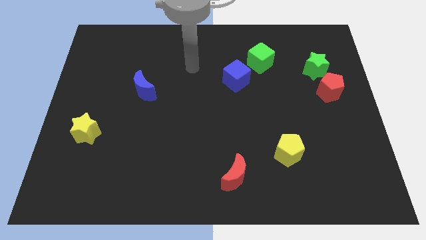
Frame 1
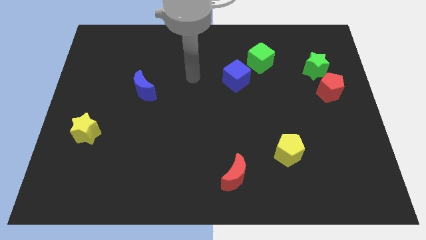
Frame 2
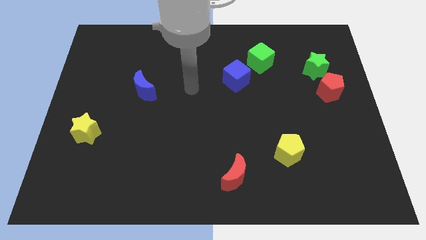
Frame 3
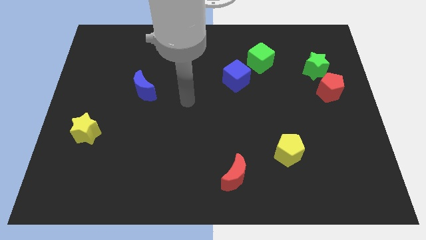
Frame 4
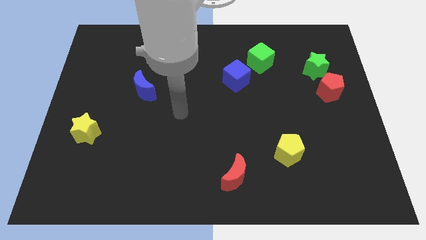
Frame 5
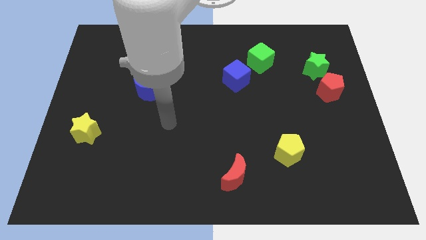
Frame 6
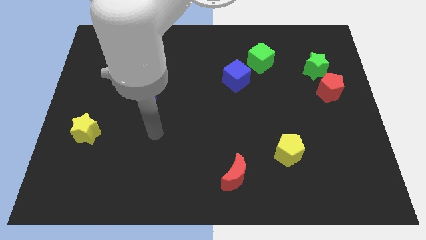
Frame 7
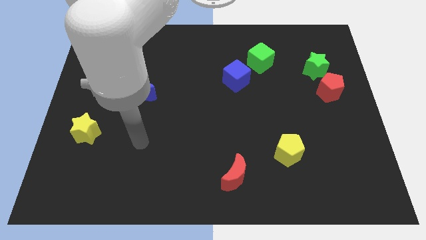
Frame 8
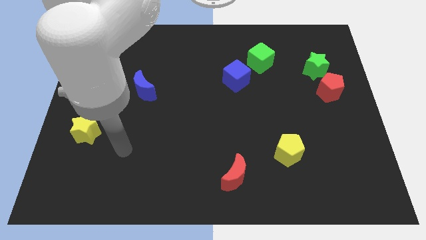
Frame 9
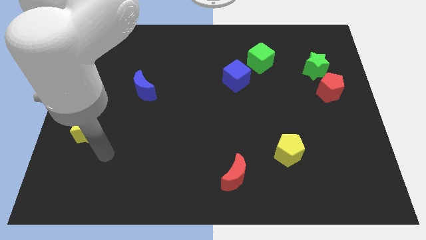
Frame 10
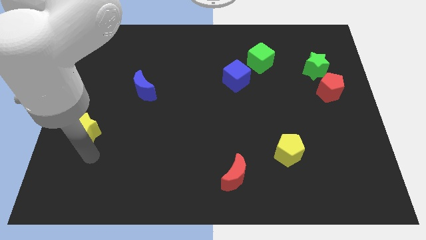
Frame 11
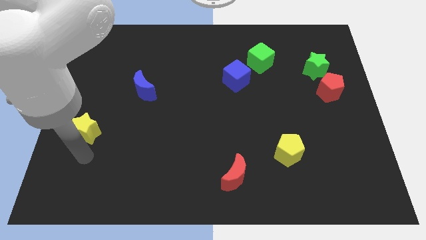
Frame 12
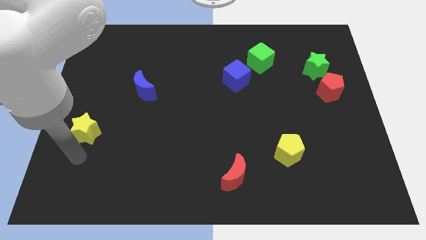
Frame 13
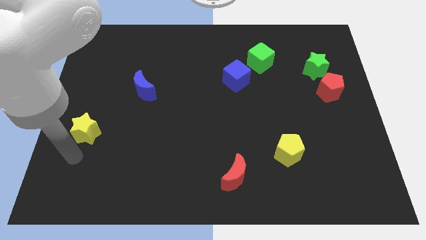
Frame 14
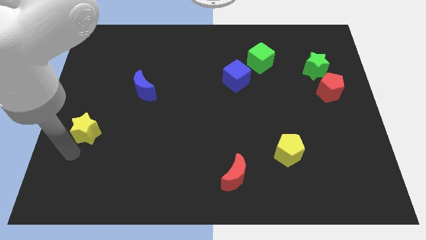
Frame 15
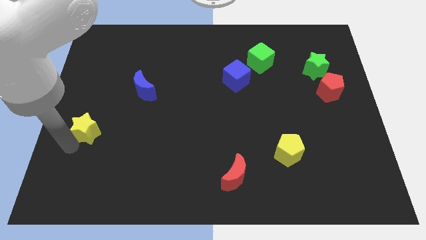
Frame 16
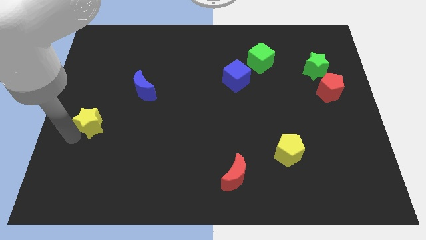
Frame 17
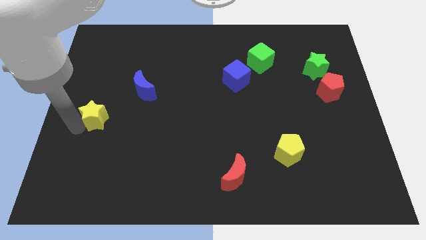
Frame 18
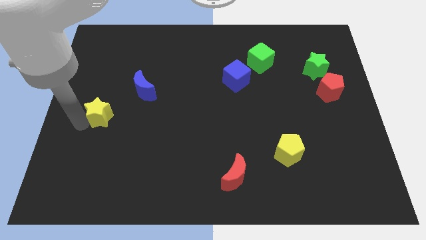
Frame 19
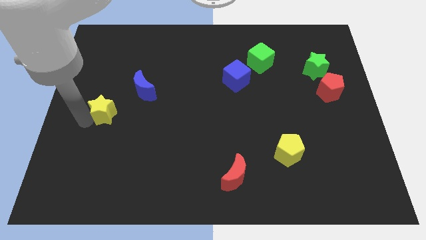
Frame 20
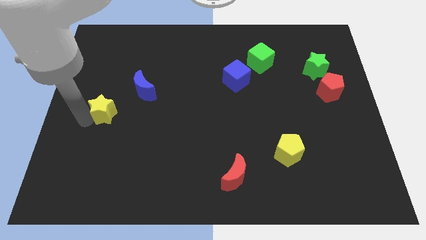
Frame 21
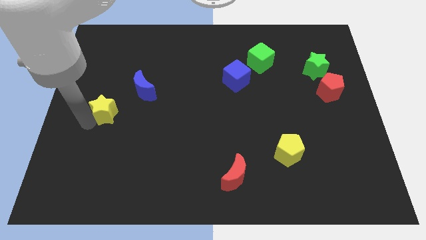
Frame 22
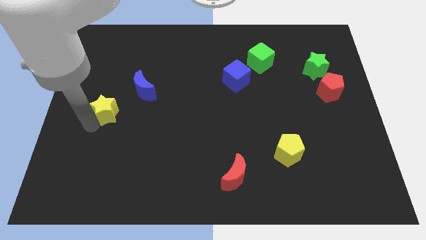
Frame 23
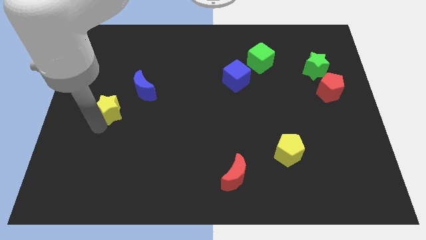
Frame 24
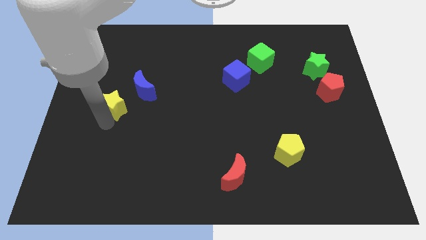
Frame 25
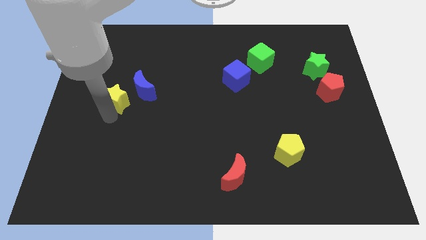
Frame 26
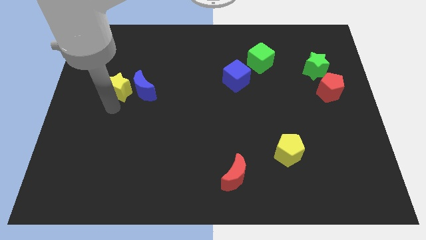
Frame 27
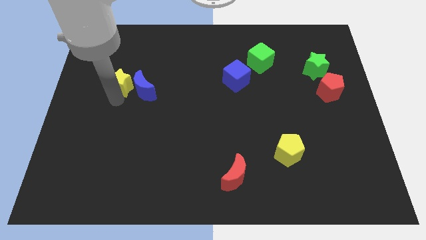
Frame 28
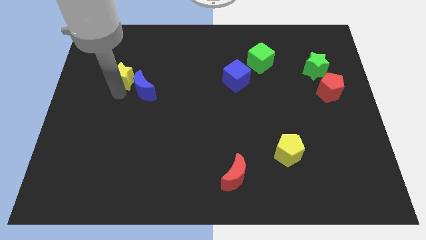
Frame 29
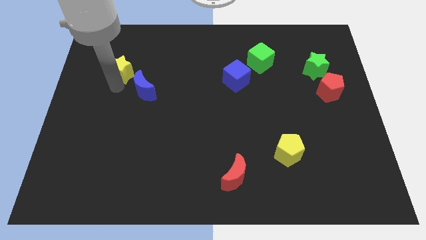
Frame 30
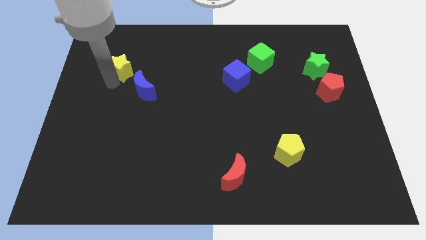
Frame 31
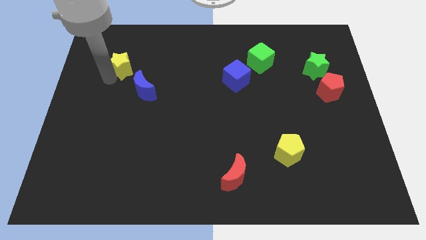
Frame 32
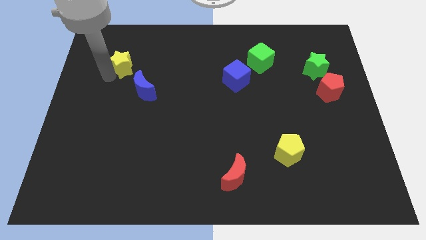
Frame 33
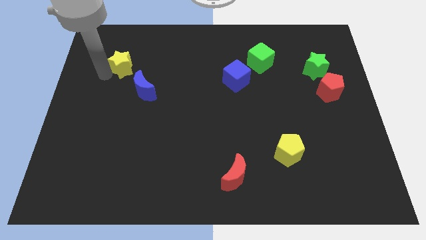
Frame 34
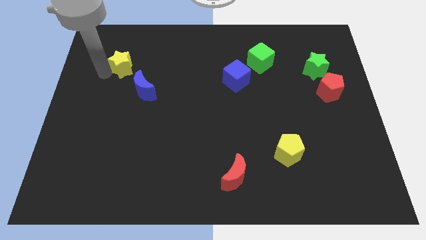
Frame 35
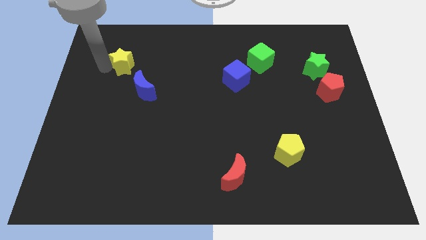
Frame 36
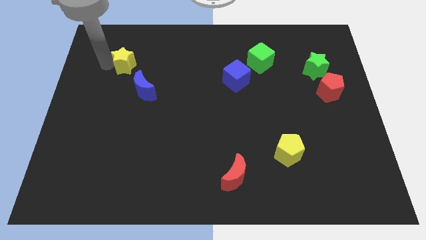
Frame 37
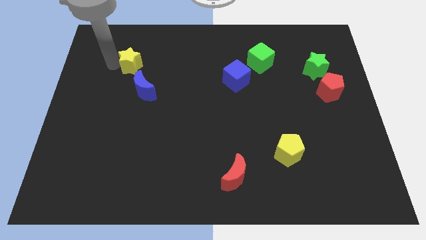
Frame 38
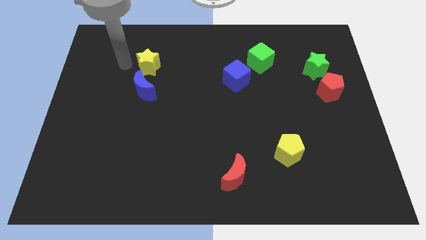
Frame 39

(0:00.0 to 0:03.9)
move the yellow star to the top side of the blue crescent

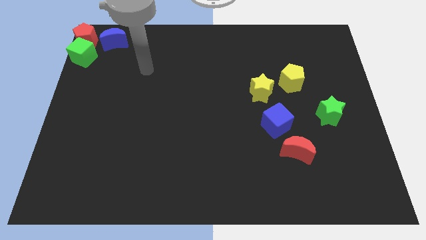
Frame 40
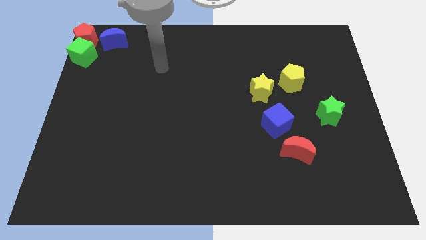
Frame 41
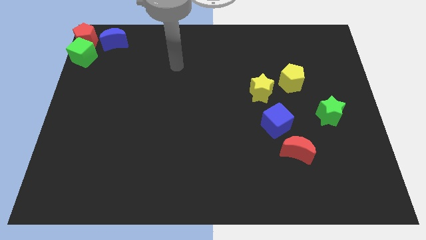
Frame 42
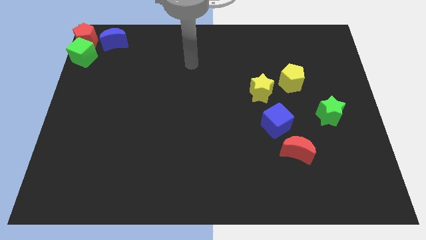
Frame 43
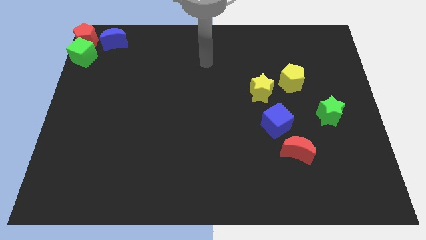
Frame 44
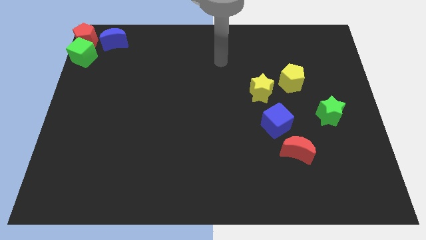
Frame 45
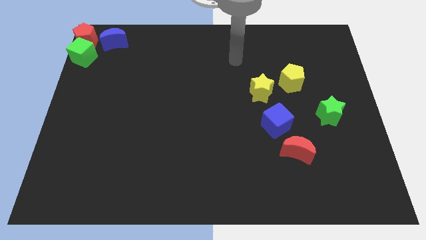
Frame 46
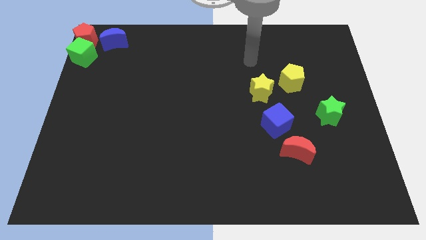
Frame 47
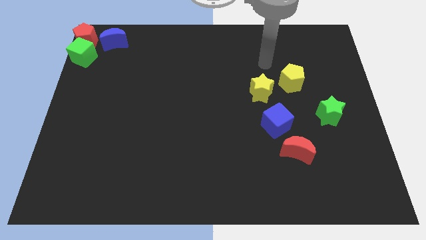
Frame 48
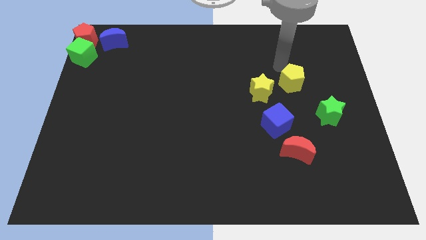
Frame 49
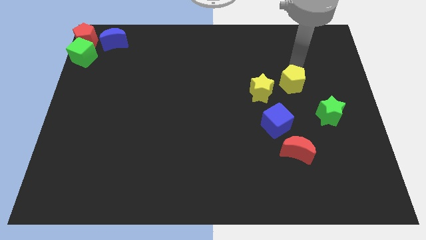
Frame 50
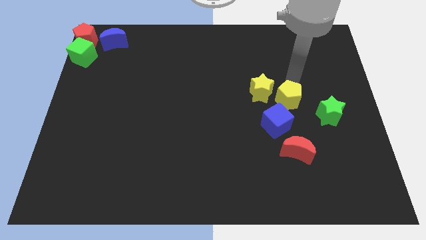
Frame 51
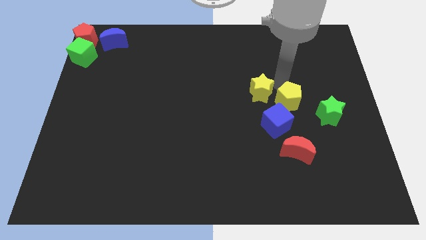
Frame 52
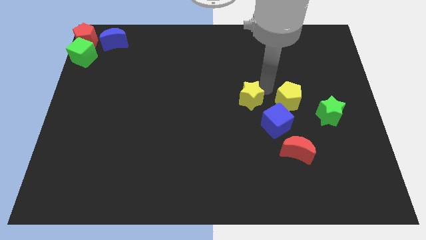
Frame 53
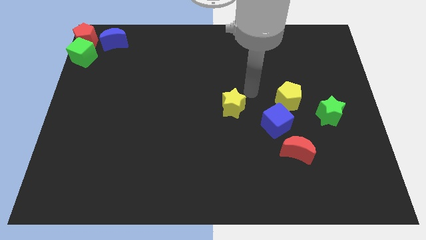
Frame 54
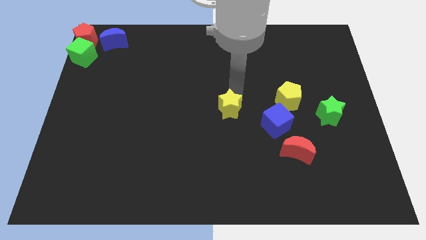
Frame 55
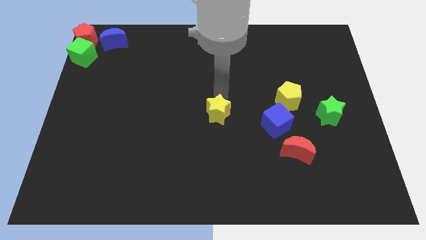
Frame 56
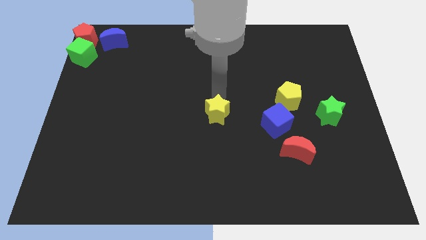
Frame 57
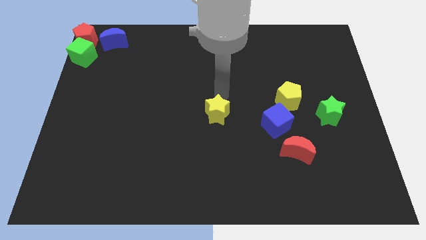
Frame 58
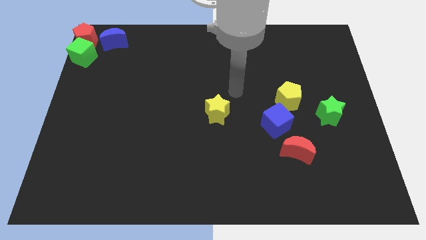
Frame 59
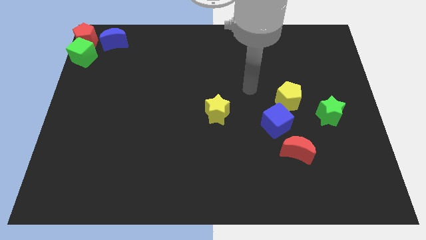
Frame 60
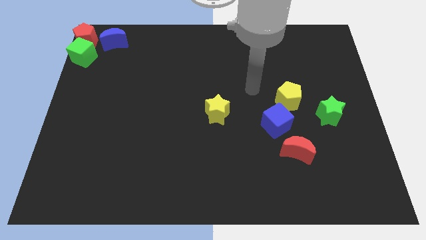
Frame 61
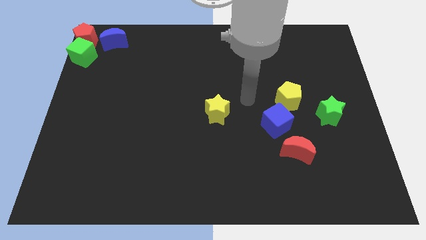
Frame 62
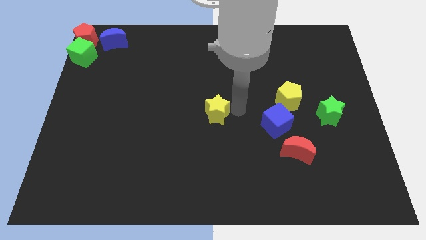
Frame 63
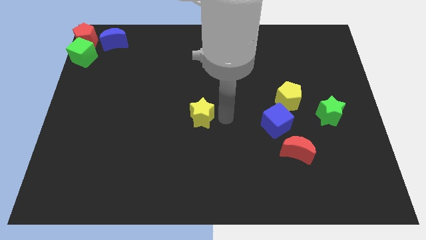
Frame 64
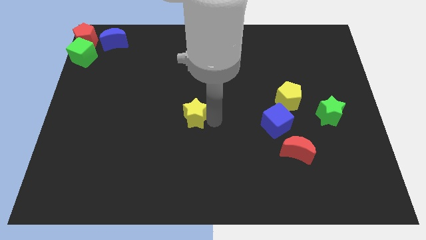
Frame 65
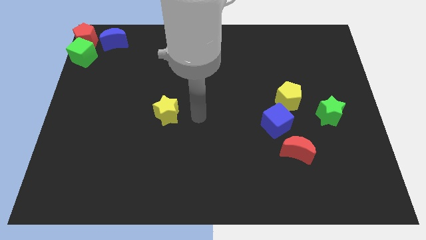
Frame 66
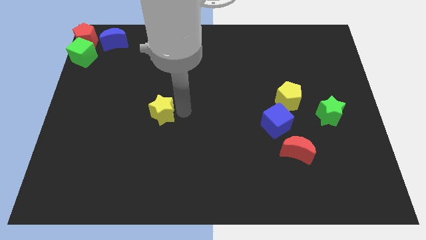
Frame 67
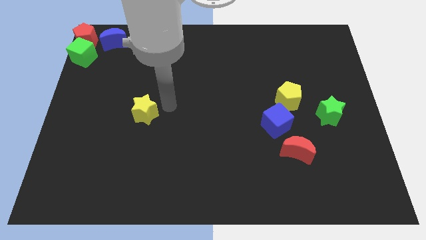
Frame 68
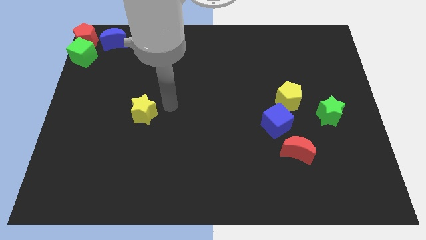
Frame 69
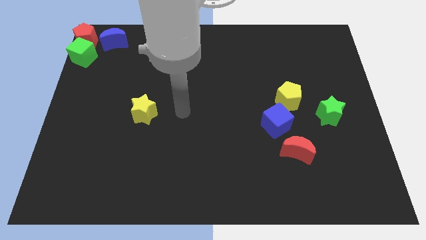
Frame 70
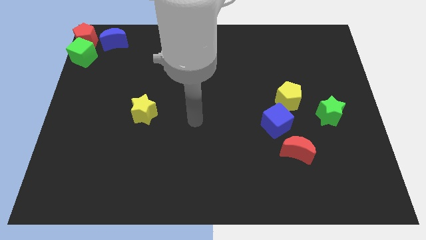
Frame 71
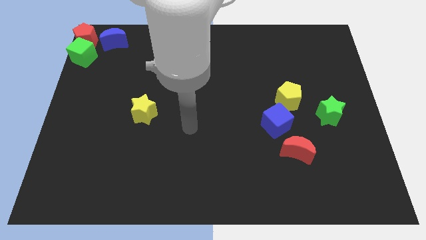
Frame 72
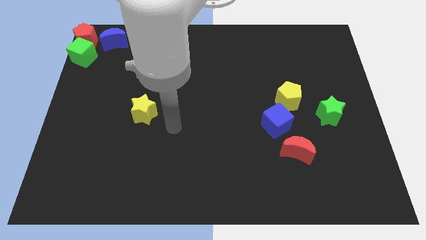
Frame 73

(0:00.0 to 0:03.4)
move yellow star to the left side

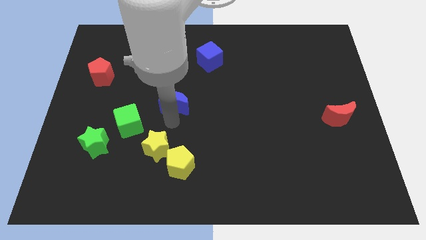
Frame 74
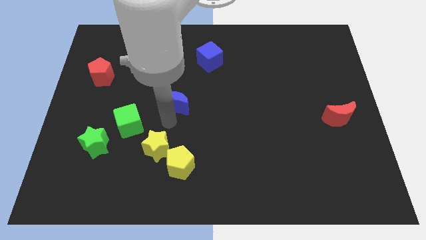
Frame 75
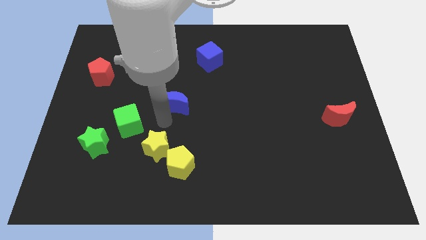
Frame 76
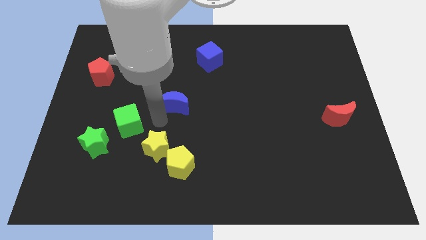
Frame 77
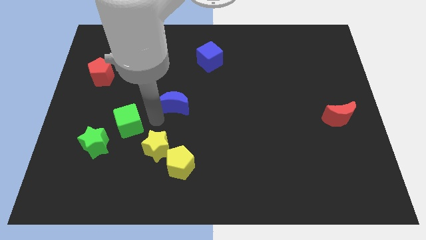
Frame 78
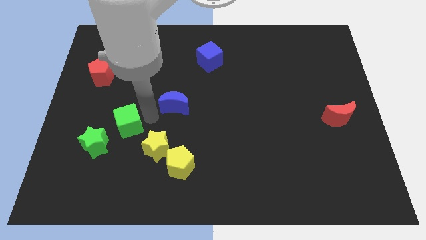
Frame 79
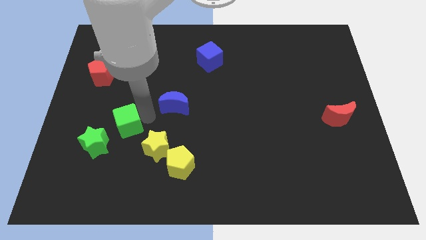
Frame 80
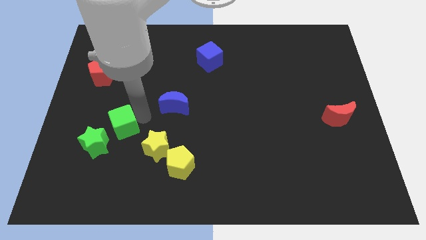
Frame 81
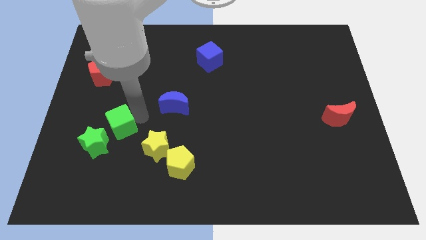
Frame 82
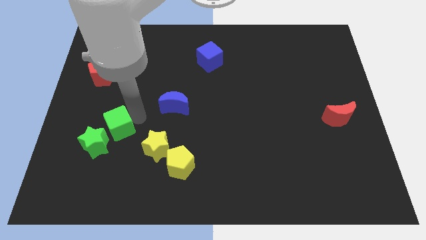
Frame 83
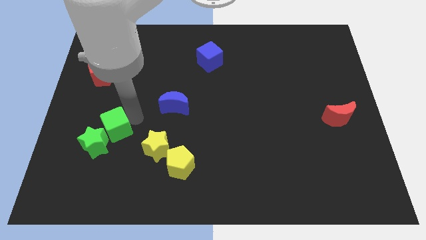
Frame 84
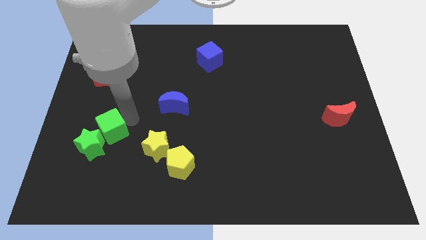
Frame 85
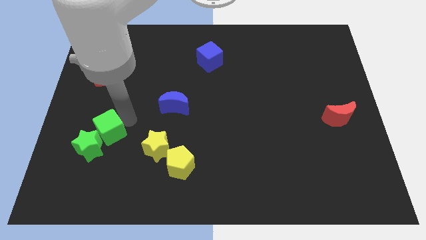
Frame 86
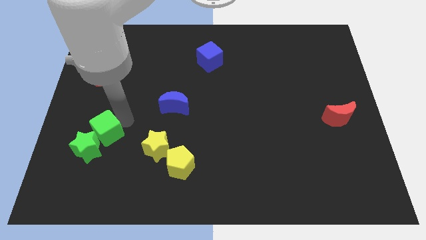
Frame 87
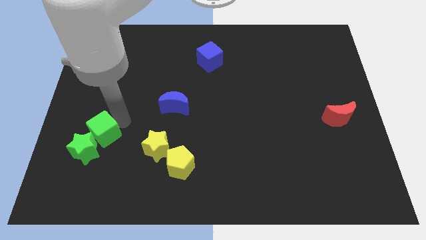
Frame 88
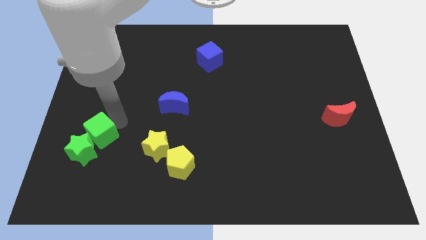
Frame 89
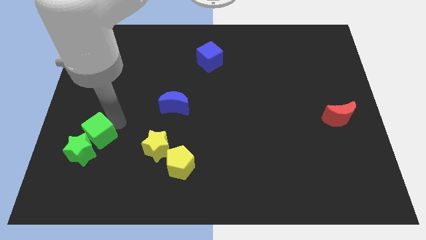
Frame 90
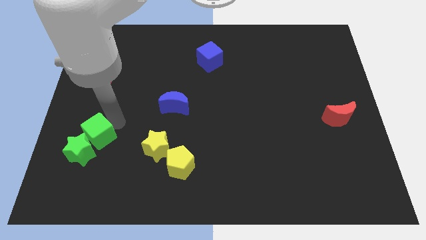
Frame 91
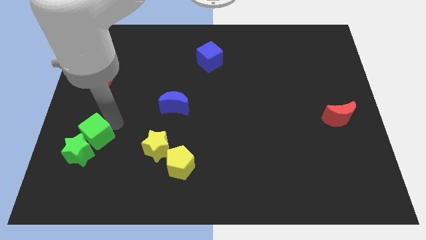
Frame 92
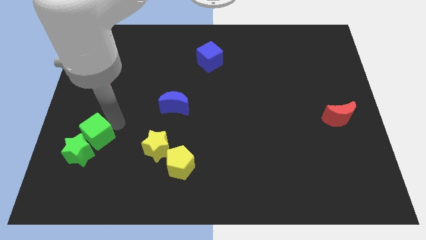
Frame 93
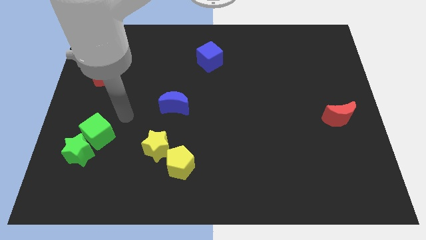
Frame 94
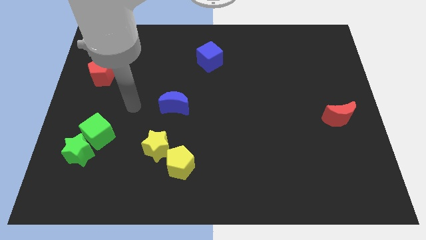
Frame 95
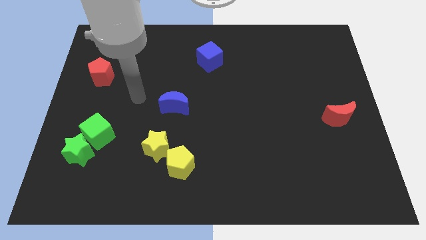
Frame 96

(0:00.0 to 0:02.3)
move the green cube into the green star
